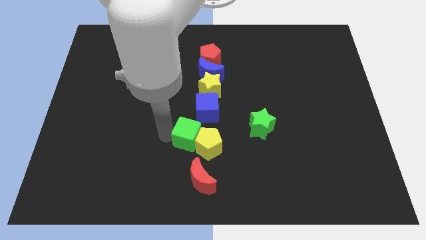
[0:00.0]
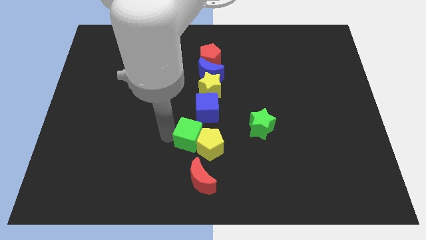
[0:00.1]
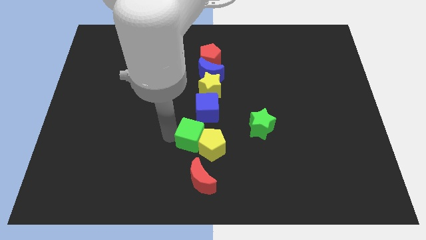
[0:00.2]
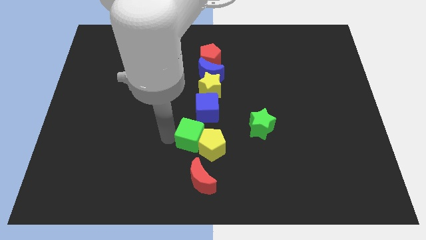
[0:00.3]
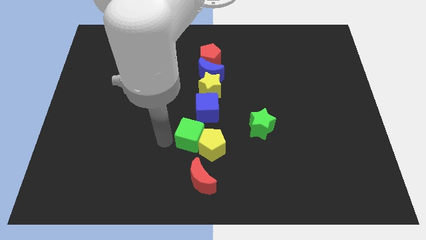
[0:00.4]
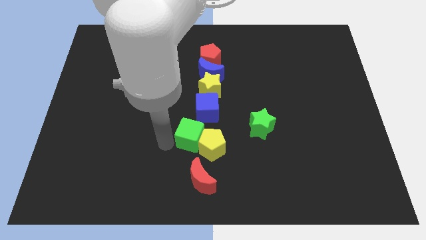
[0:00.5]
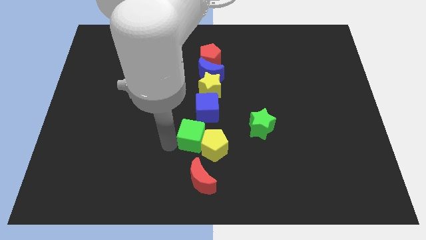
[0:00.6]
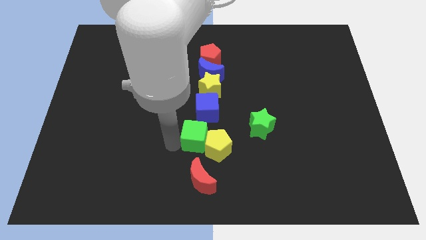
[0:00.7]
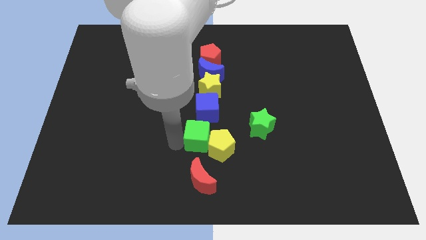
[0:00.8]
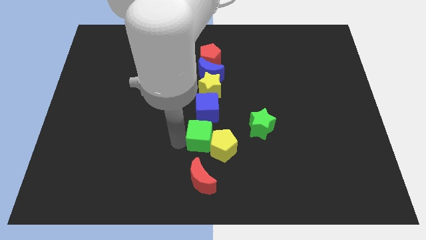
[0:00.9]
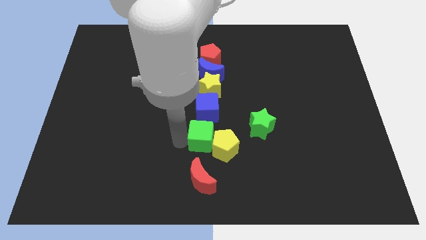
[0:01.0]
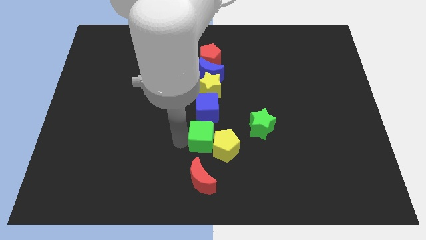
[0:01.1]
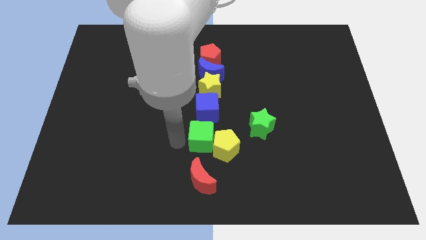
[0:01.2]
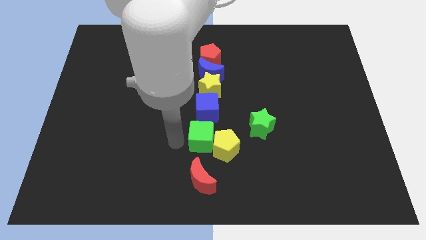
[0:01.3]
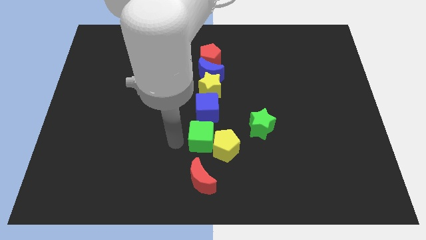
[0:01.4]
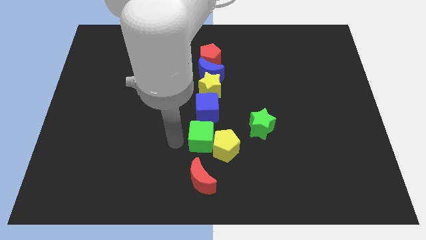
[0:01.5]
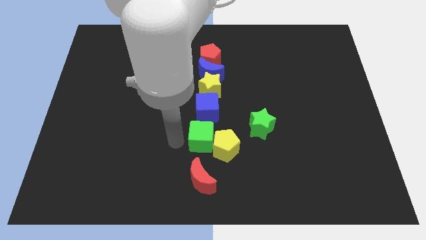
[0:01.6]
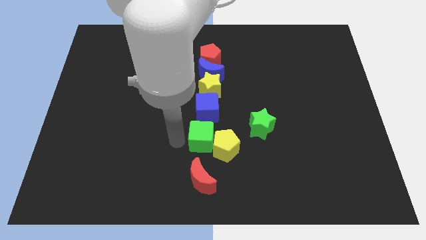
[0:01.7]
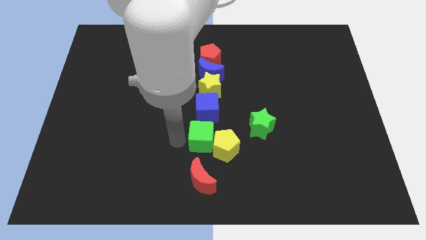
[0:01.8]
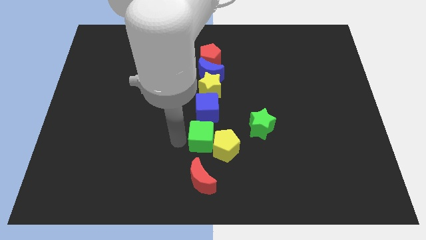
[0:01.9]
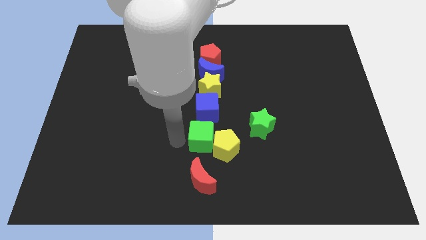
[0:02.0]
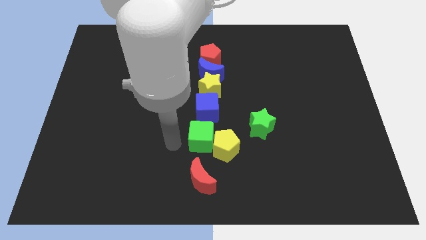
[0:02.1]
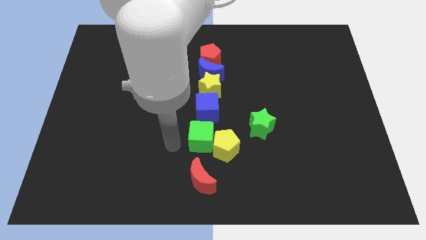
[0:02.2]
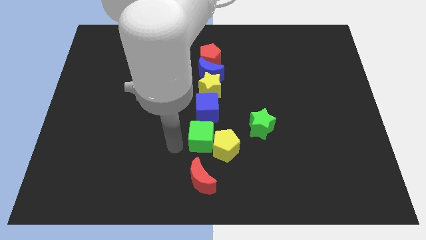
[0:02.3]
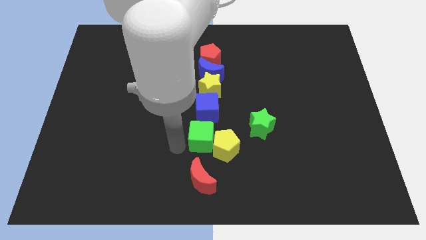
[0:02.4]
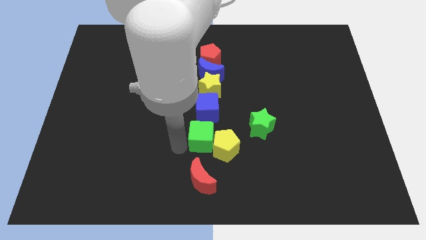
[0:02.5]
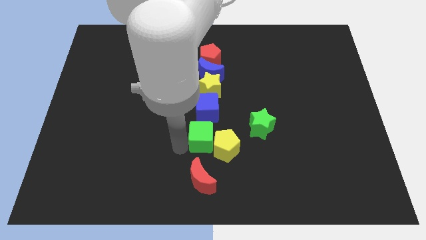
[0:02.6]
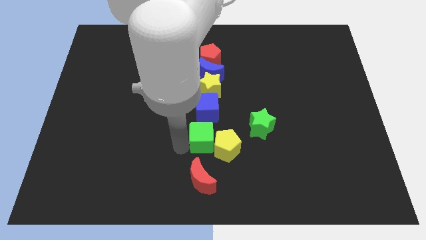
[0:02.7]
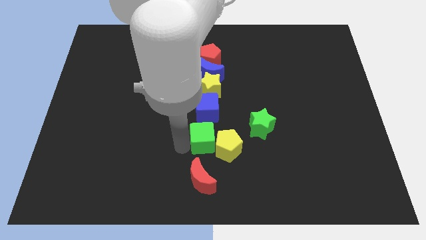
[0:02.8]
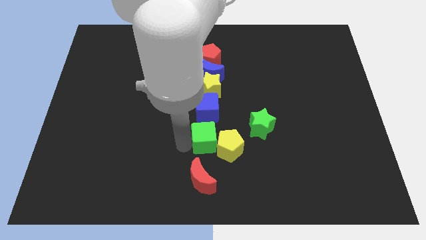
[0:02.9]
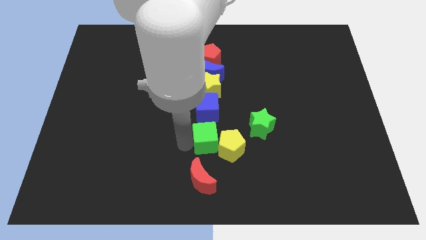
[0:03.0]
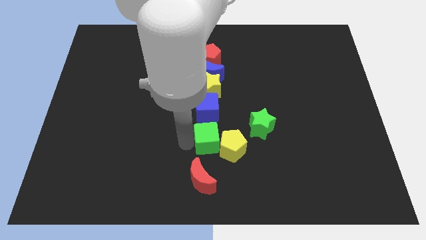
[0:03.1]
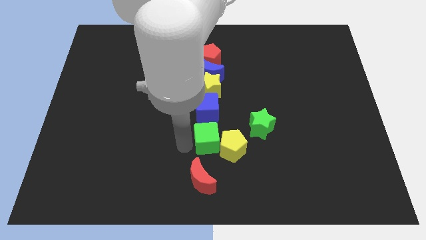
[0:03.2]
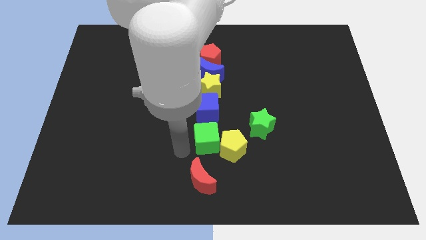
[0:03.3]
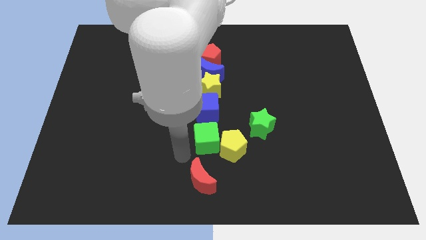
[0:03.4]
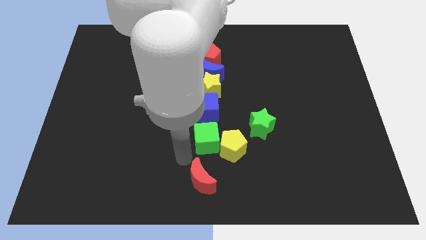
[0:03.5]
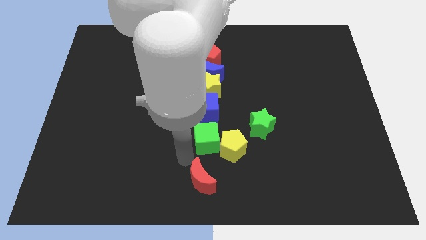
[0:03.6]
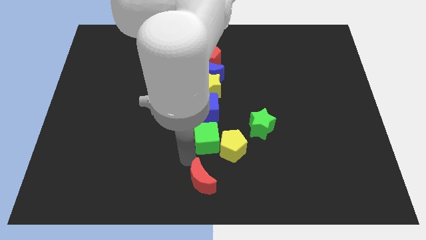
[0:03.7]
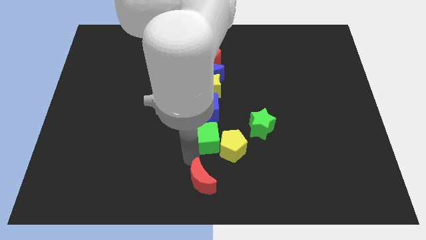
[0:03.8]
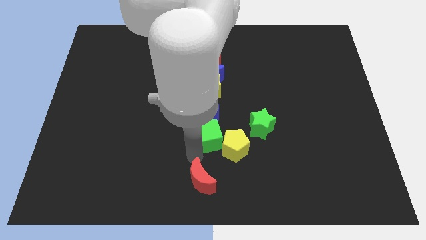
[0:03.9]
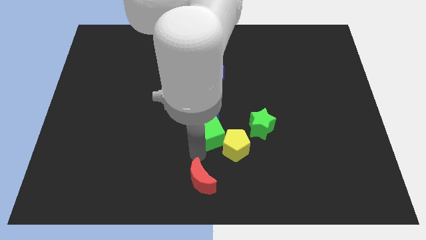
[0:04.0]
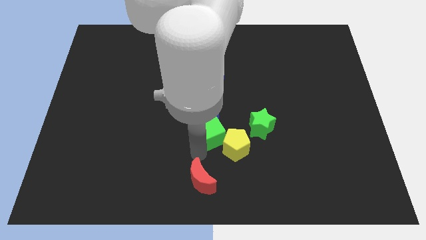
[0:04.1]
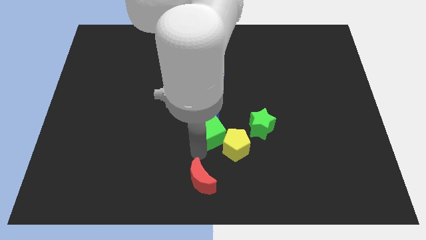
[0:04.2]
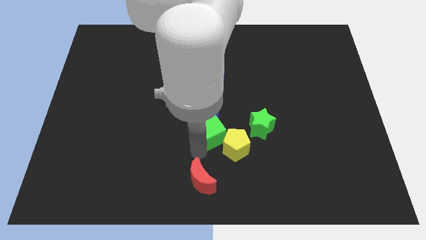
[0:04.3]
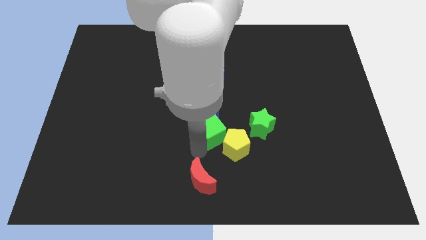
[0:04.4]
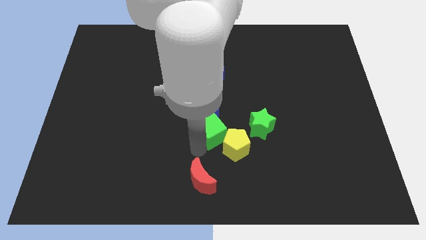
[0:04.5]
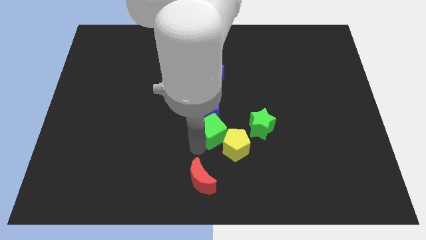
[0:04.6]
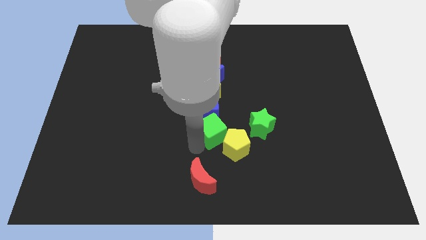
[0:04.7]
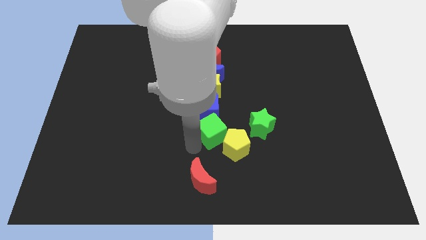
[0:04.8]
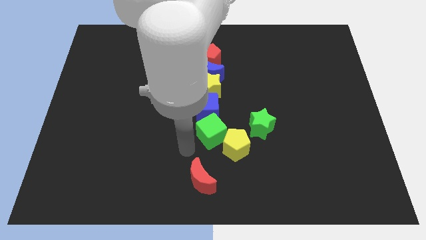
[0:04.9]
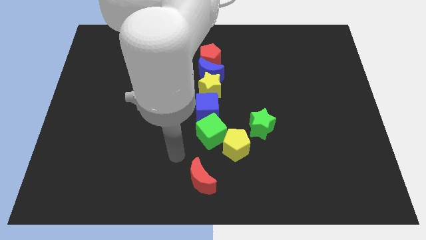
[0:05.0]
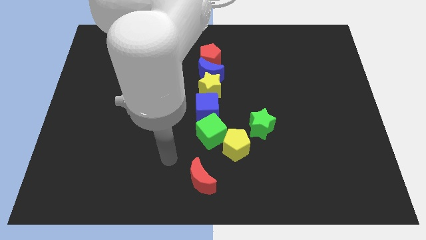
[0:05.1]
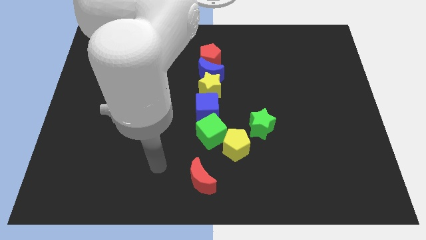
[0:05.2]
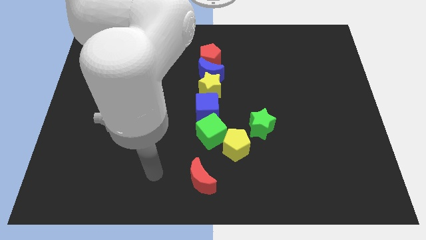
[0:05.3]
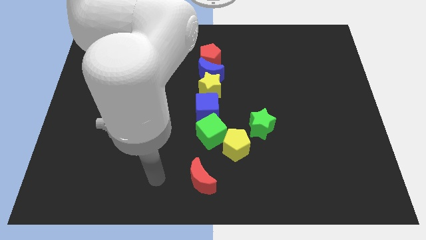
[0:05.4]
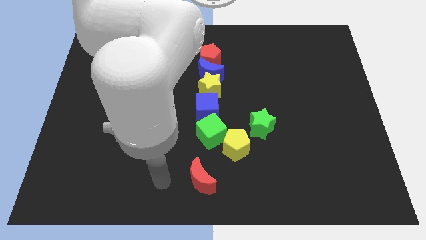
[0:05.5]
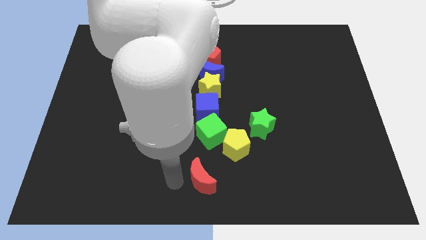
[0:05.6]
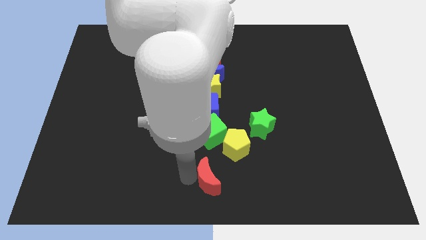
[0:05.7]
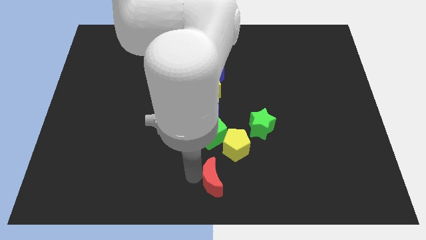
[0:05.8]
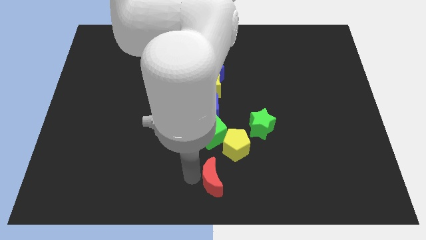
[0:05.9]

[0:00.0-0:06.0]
move the red crescent to the green star

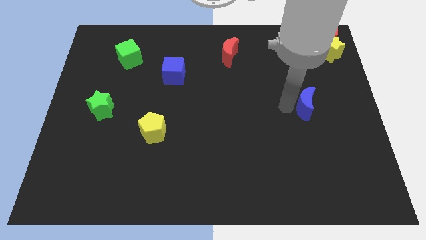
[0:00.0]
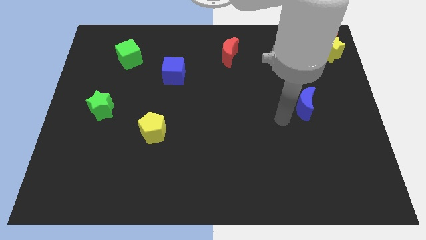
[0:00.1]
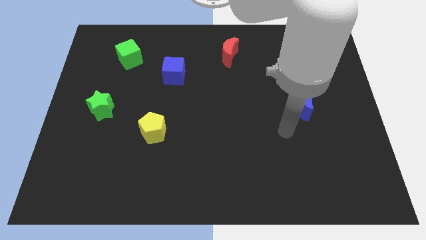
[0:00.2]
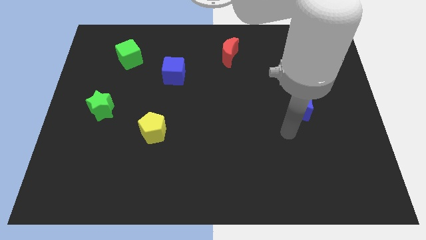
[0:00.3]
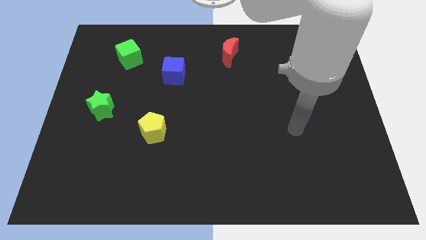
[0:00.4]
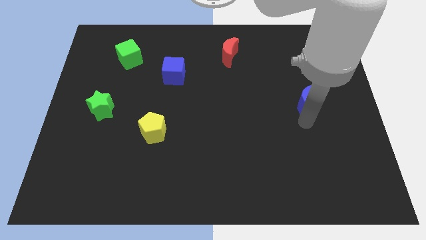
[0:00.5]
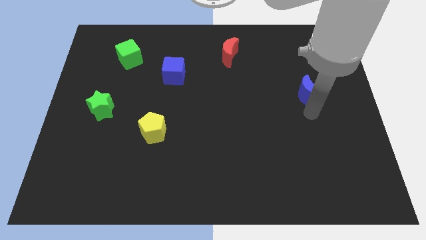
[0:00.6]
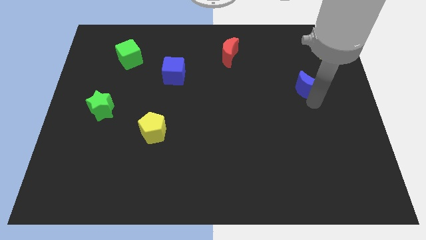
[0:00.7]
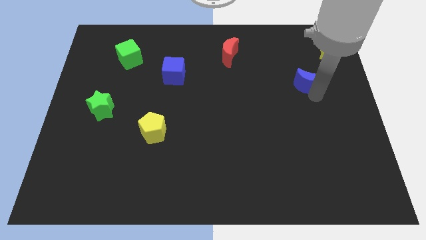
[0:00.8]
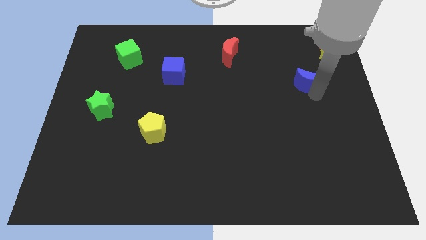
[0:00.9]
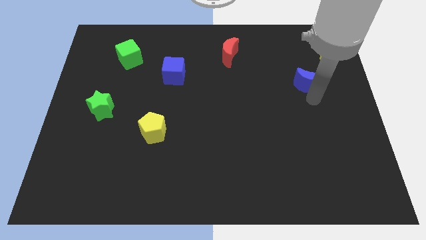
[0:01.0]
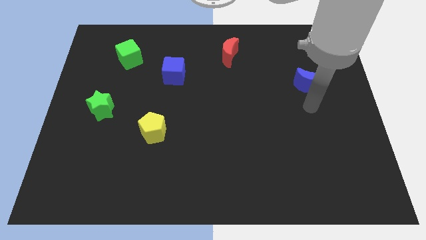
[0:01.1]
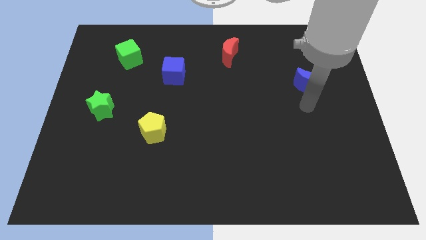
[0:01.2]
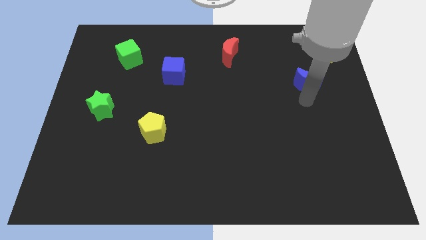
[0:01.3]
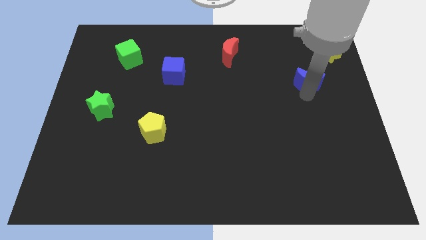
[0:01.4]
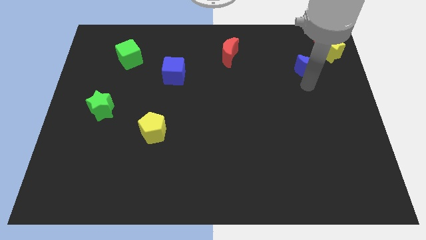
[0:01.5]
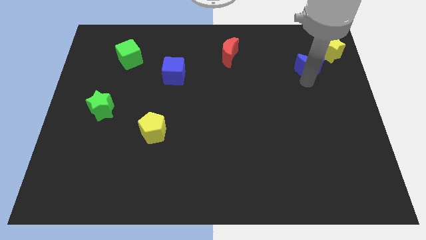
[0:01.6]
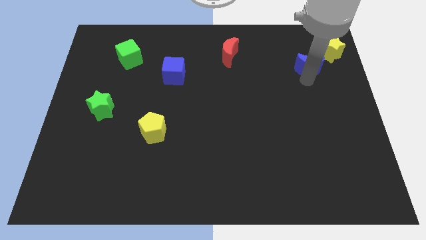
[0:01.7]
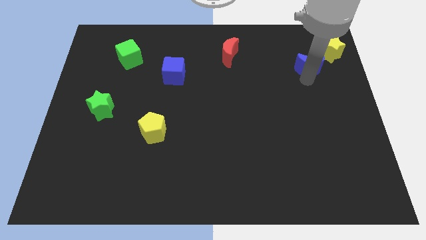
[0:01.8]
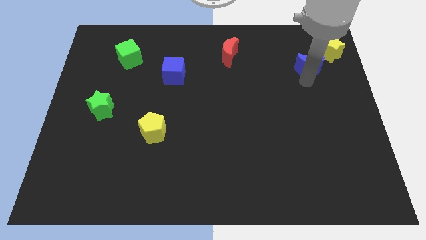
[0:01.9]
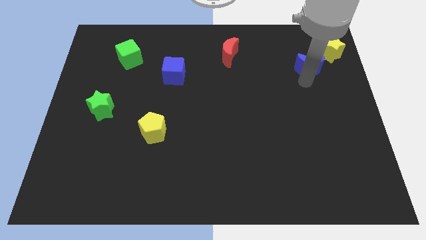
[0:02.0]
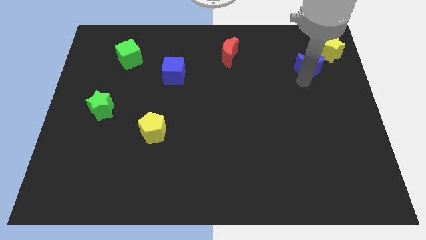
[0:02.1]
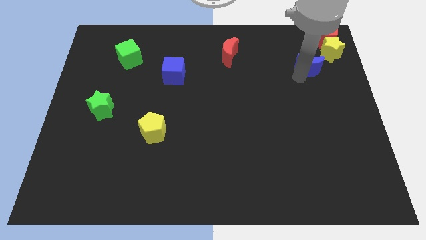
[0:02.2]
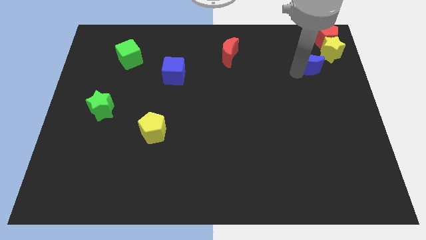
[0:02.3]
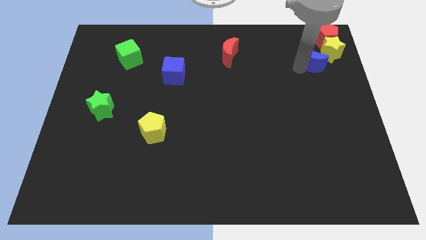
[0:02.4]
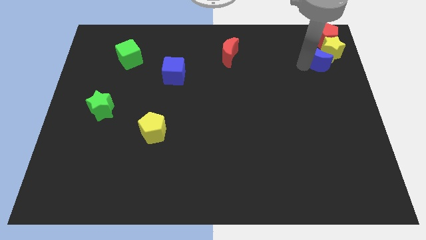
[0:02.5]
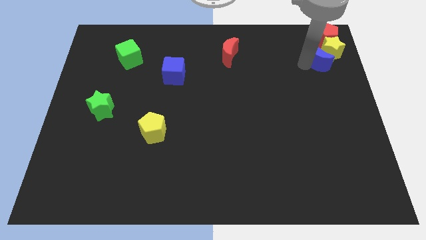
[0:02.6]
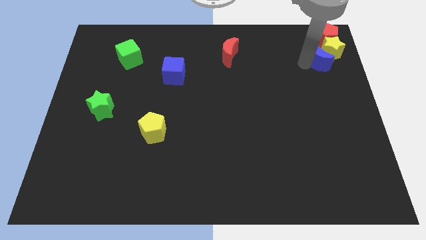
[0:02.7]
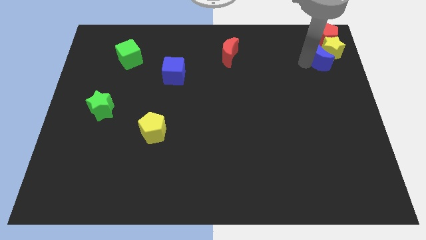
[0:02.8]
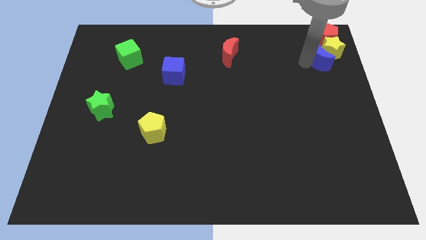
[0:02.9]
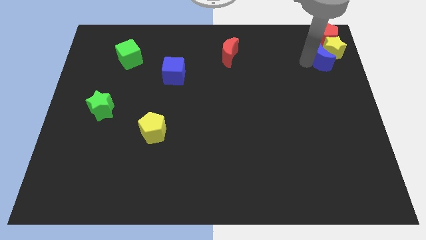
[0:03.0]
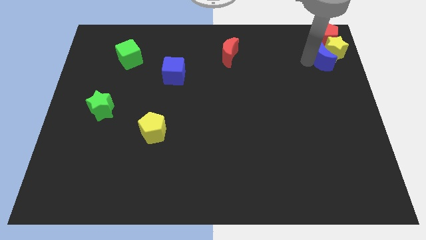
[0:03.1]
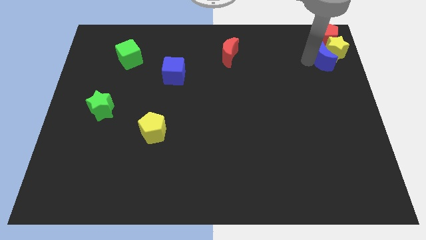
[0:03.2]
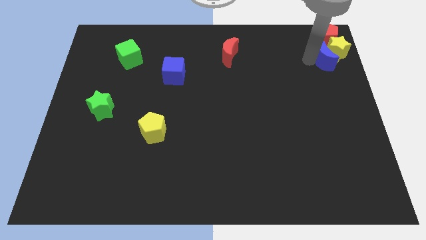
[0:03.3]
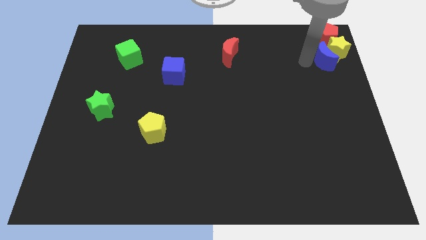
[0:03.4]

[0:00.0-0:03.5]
push the blue crescent into the yellow star
